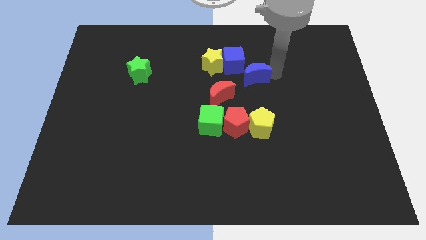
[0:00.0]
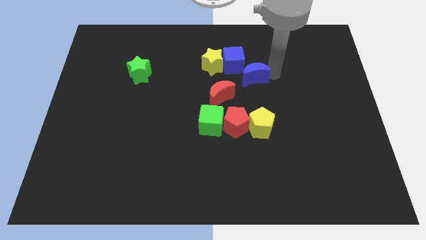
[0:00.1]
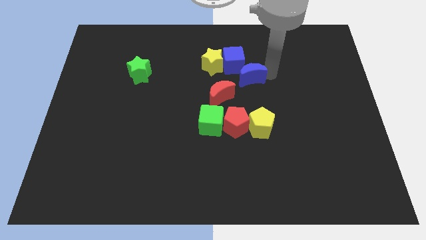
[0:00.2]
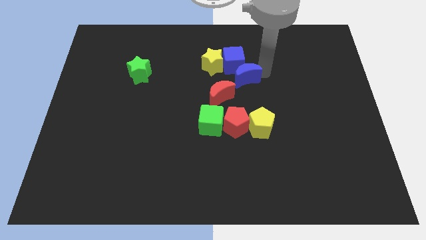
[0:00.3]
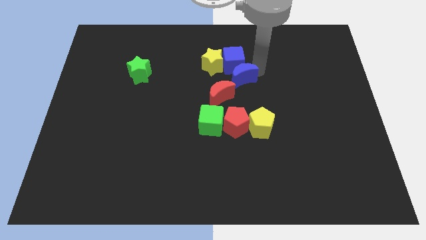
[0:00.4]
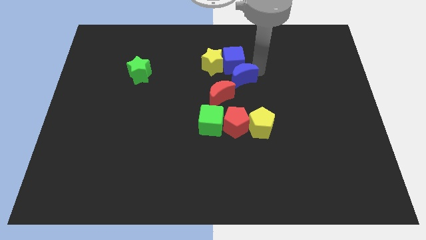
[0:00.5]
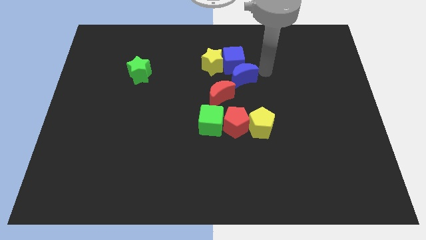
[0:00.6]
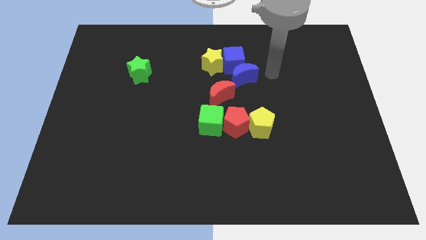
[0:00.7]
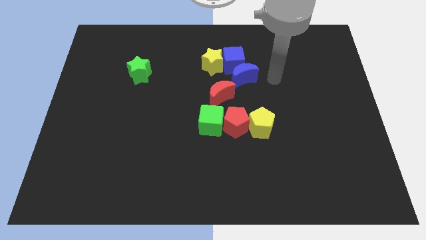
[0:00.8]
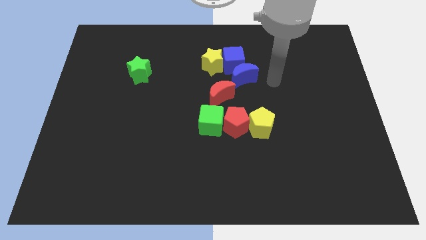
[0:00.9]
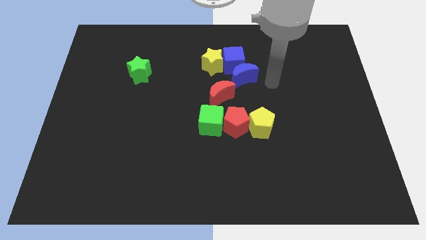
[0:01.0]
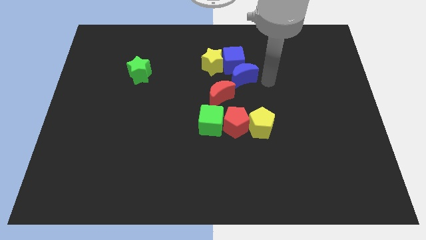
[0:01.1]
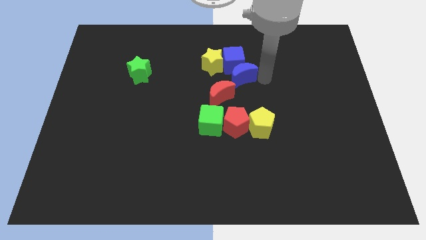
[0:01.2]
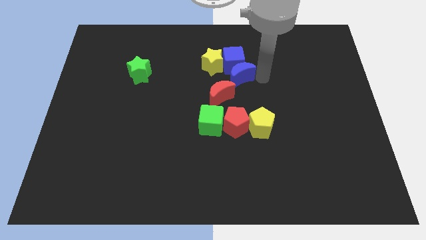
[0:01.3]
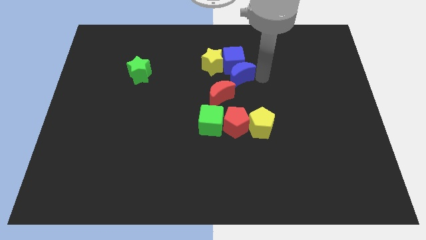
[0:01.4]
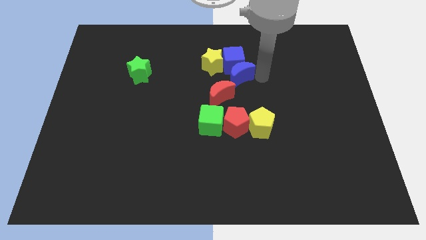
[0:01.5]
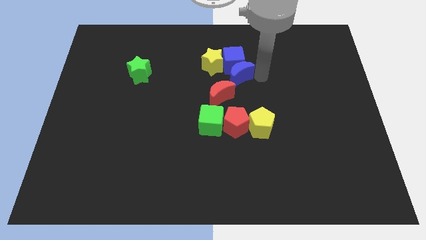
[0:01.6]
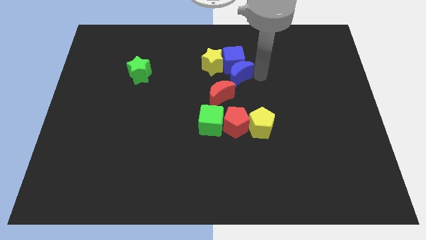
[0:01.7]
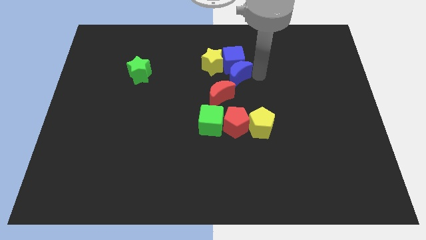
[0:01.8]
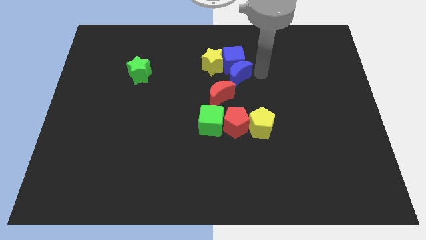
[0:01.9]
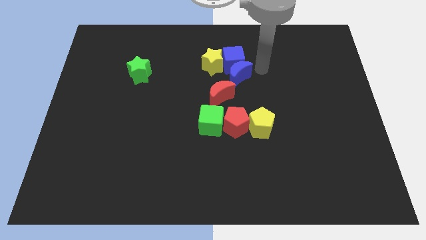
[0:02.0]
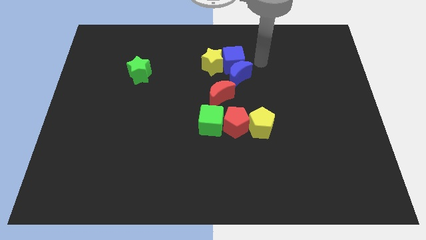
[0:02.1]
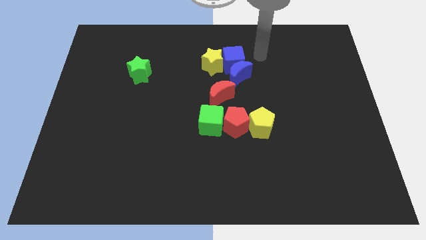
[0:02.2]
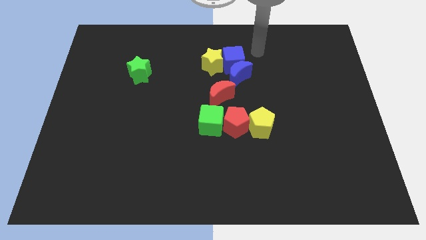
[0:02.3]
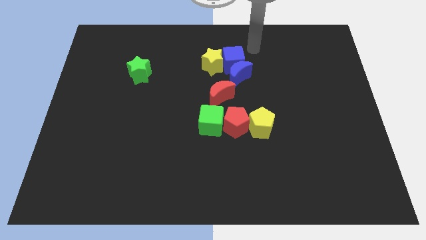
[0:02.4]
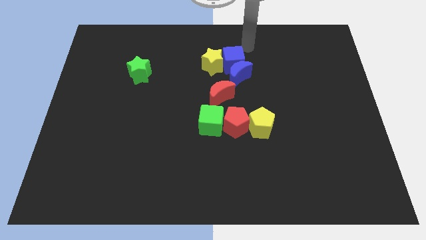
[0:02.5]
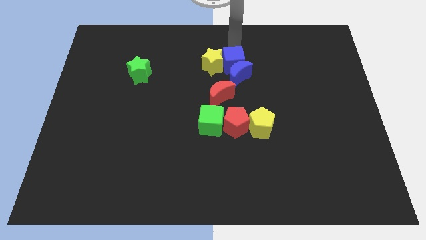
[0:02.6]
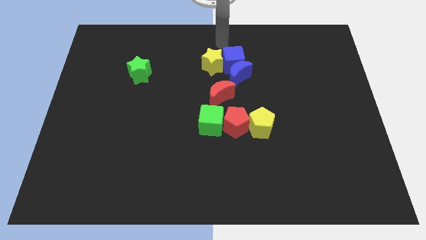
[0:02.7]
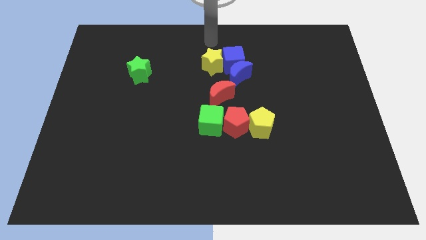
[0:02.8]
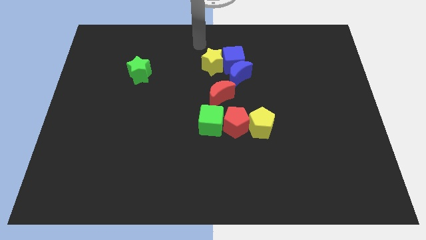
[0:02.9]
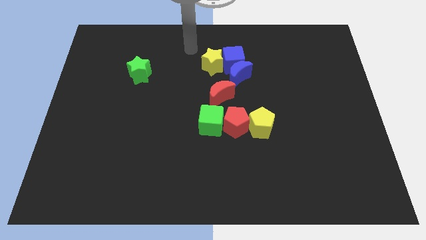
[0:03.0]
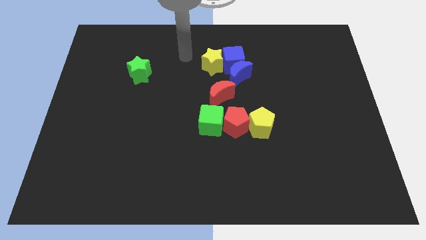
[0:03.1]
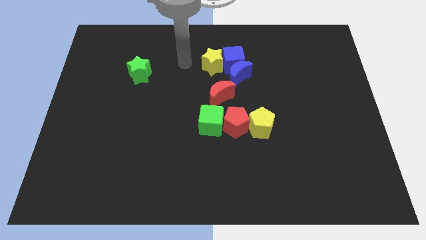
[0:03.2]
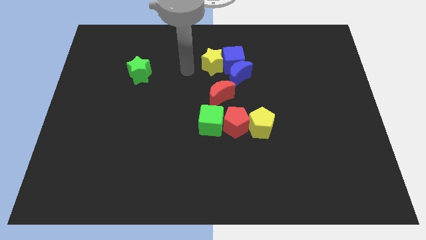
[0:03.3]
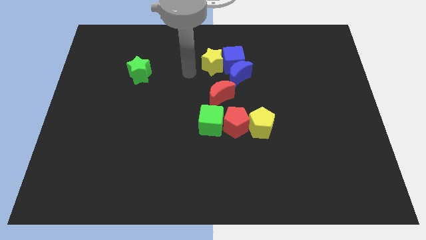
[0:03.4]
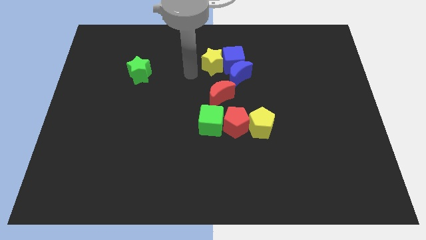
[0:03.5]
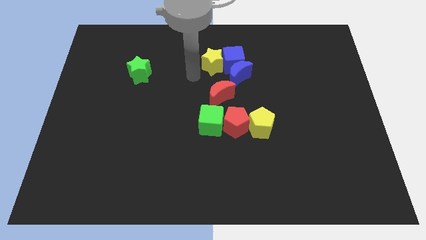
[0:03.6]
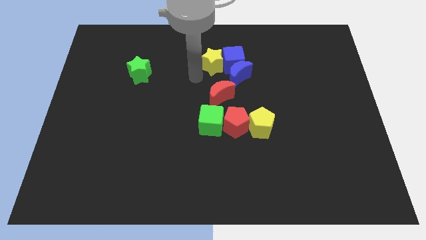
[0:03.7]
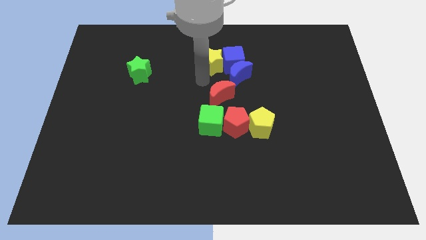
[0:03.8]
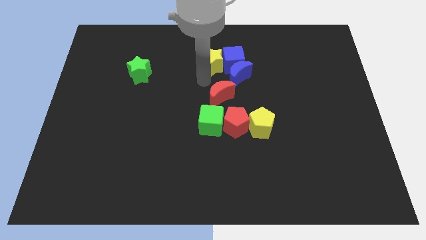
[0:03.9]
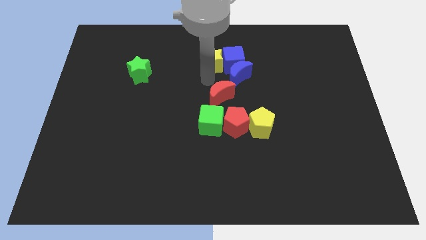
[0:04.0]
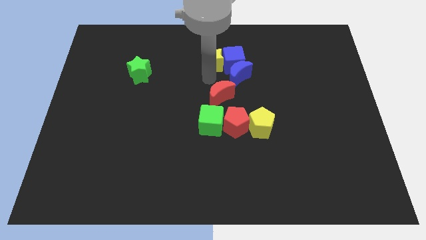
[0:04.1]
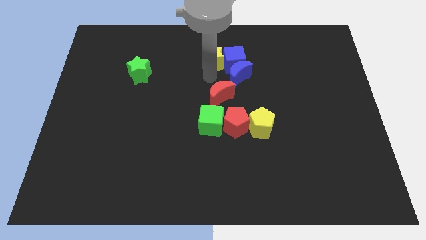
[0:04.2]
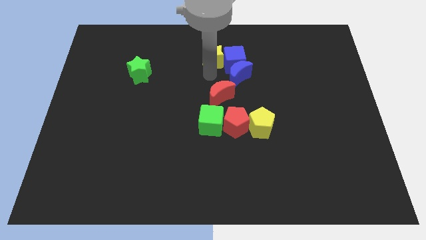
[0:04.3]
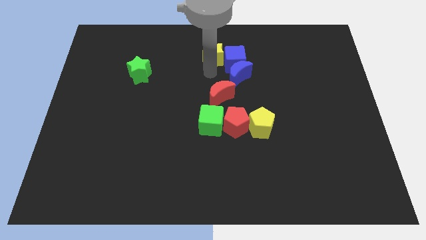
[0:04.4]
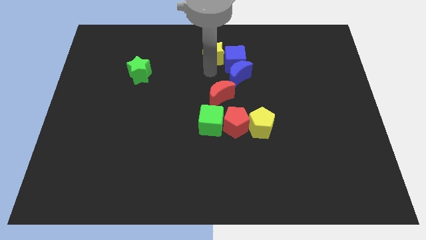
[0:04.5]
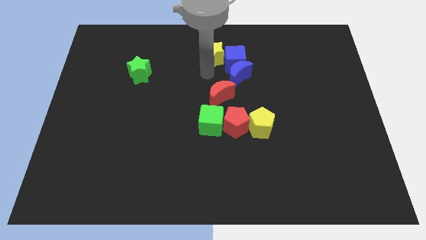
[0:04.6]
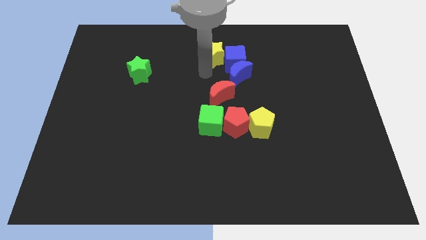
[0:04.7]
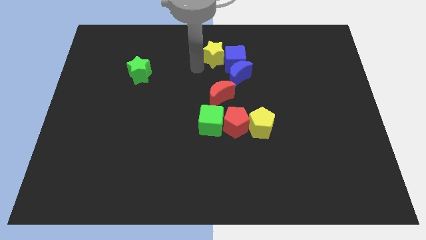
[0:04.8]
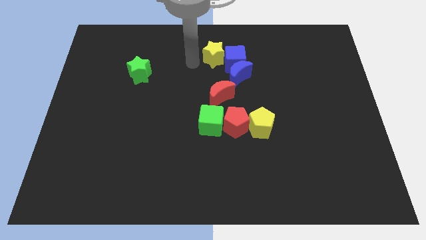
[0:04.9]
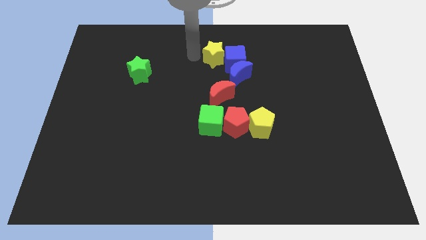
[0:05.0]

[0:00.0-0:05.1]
move the yellow star towards the top center

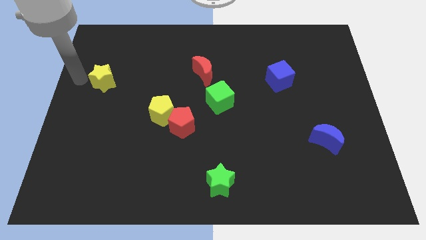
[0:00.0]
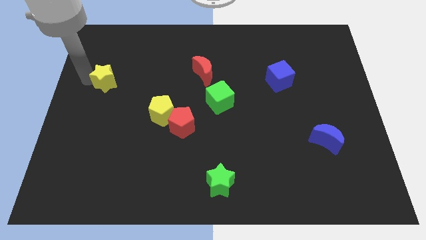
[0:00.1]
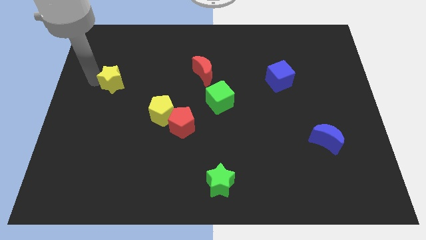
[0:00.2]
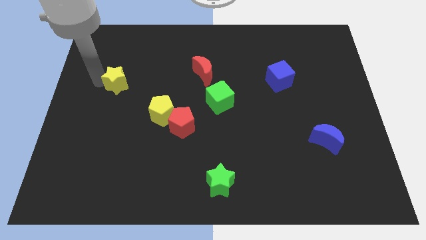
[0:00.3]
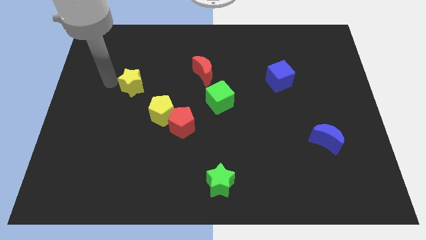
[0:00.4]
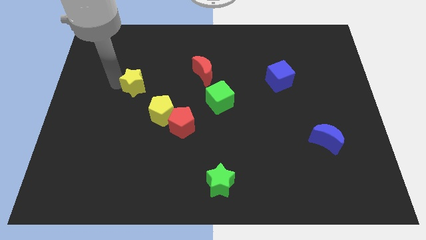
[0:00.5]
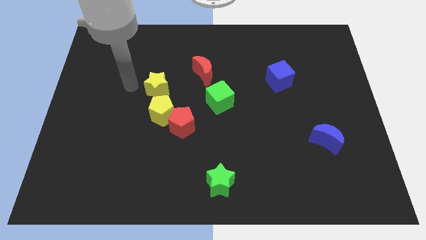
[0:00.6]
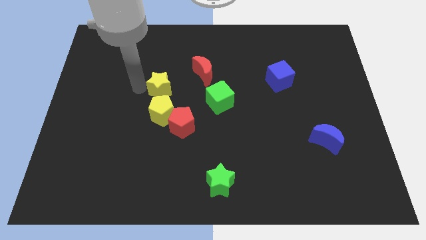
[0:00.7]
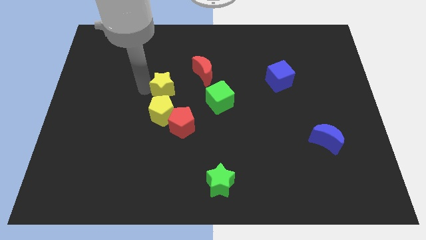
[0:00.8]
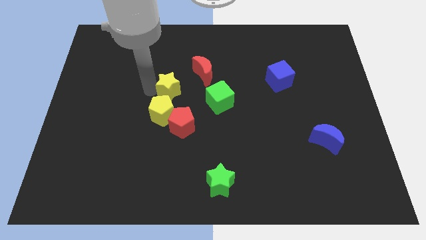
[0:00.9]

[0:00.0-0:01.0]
move the yellow star vertical to the yellow pentagon

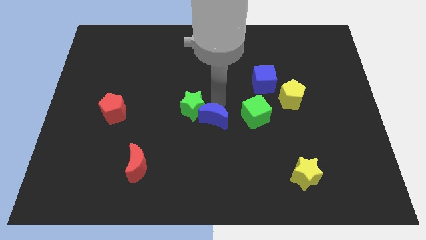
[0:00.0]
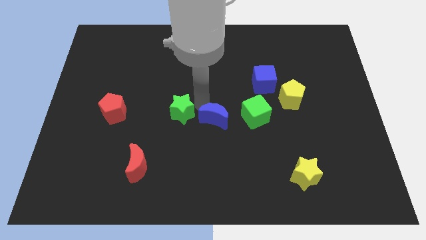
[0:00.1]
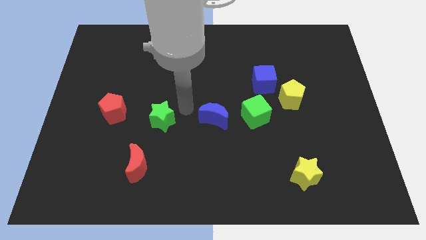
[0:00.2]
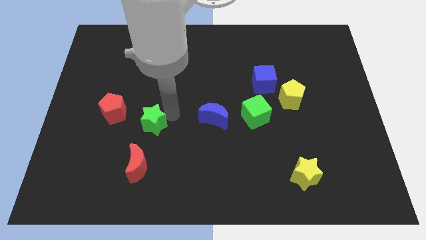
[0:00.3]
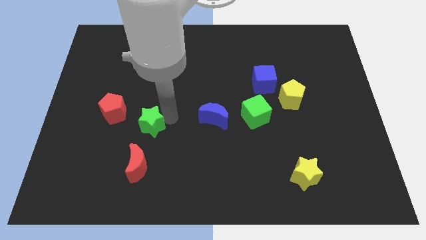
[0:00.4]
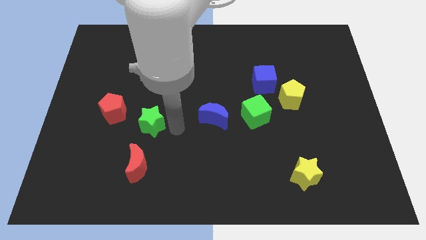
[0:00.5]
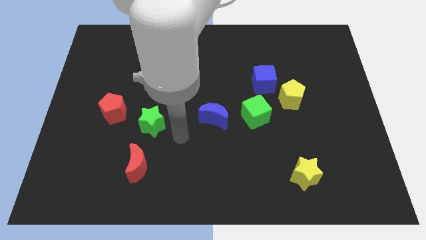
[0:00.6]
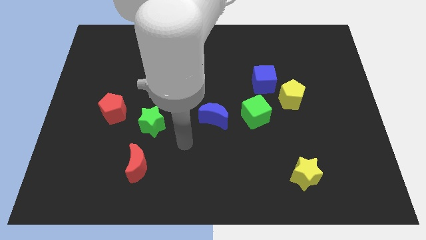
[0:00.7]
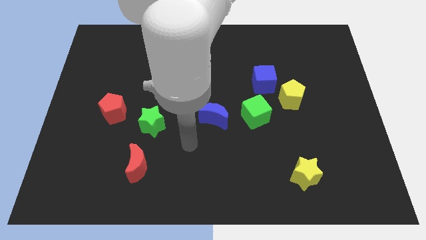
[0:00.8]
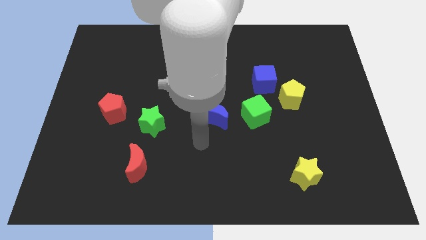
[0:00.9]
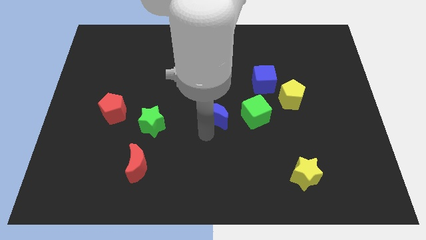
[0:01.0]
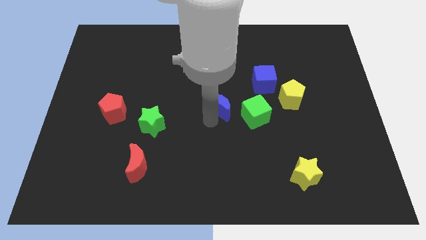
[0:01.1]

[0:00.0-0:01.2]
separate green star from the blue moon

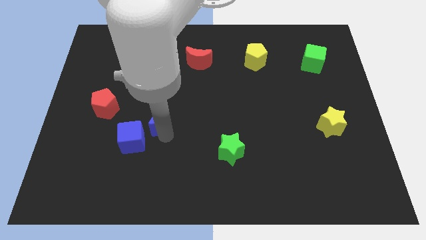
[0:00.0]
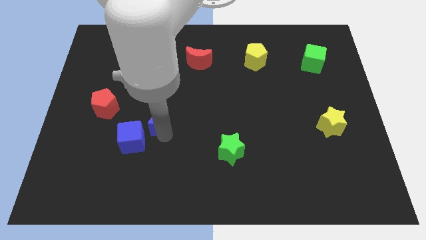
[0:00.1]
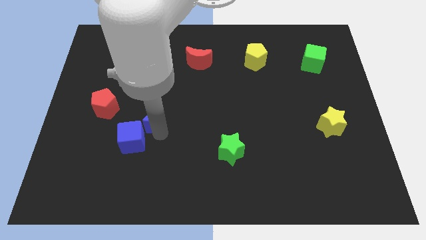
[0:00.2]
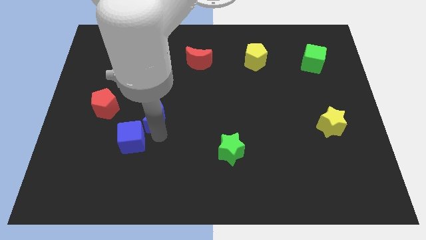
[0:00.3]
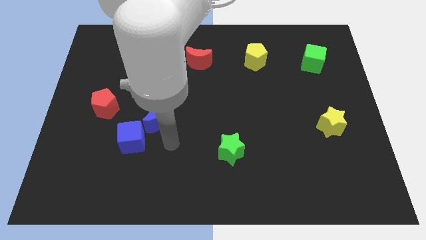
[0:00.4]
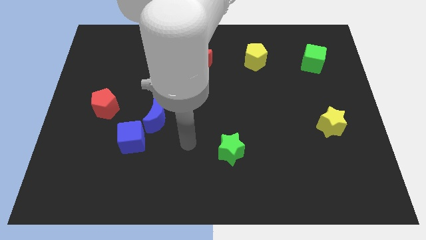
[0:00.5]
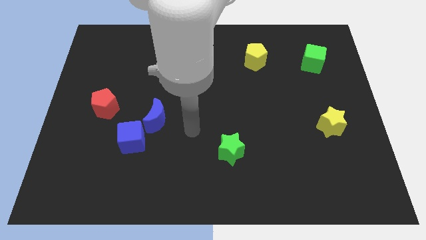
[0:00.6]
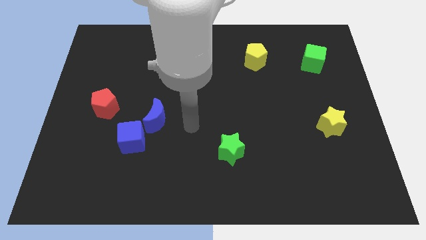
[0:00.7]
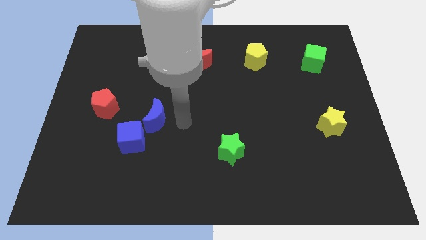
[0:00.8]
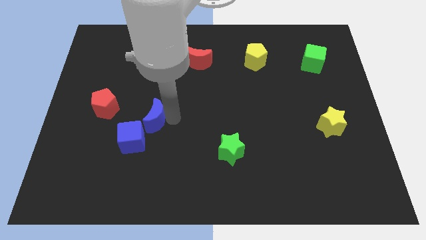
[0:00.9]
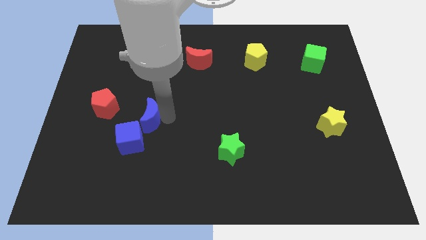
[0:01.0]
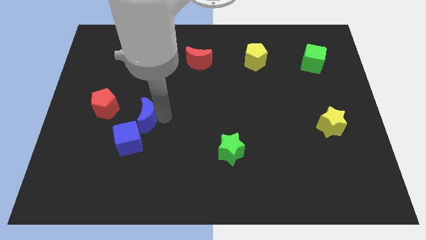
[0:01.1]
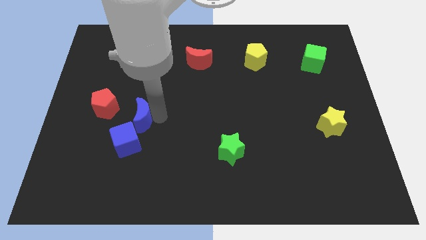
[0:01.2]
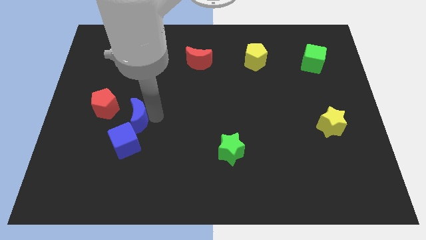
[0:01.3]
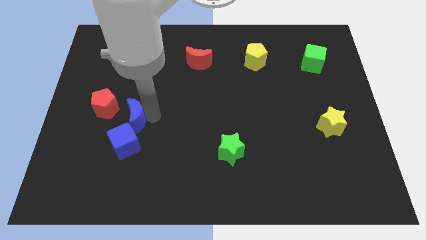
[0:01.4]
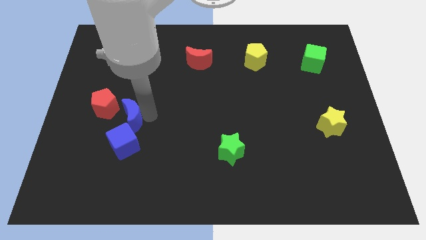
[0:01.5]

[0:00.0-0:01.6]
push the blue crescent into the blue cube
